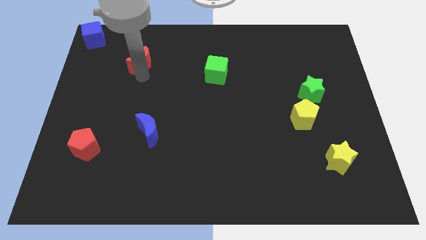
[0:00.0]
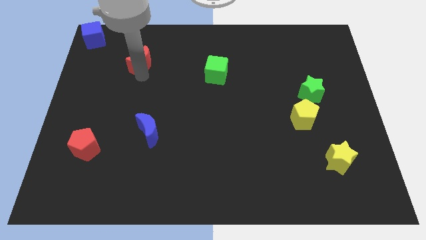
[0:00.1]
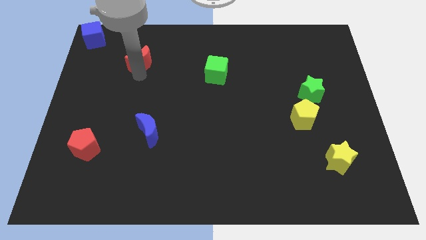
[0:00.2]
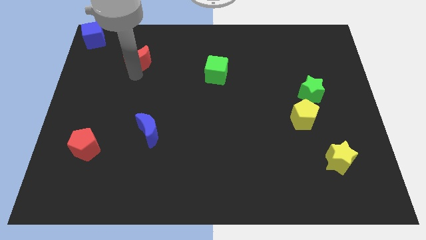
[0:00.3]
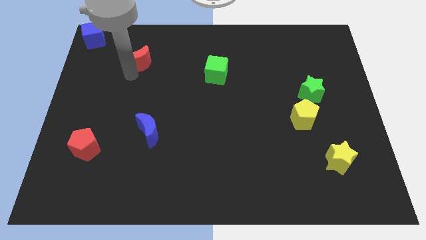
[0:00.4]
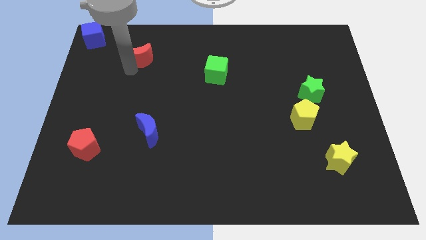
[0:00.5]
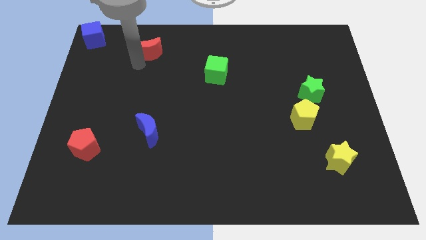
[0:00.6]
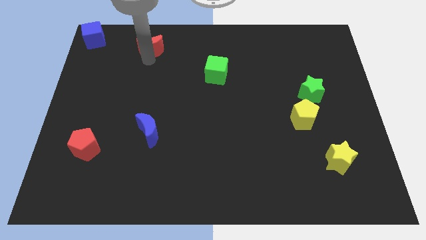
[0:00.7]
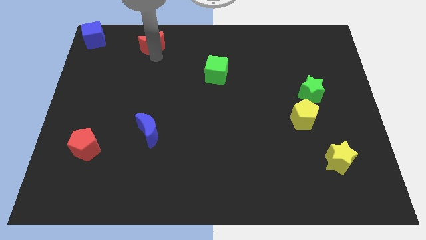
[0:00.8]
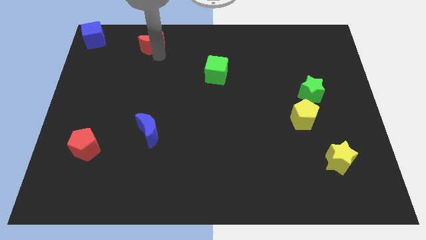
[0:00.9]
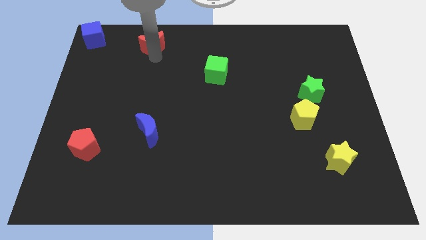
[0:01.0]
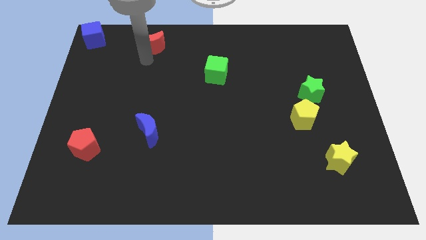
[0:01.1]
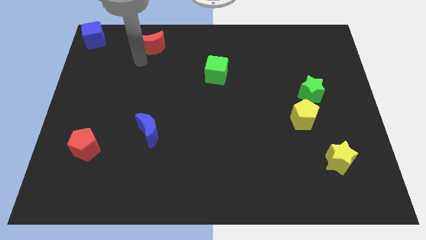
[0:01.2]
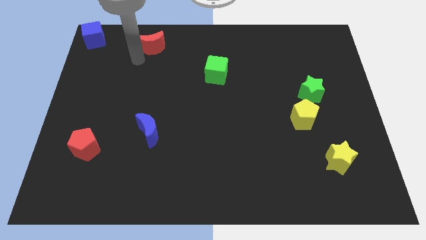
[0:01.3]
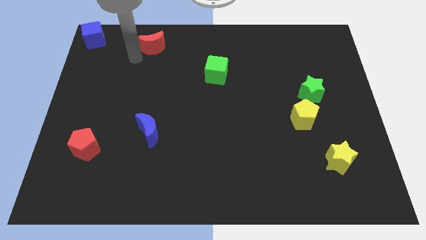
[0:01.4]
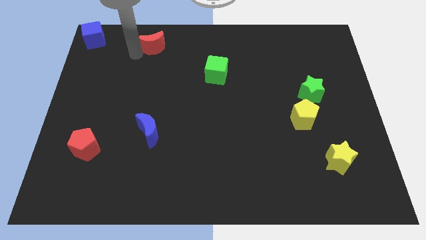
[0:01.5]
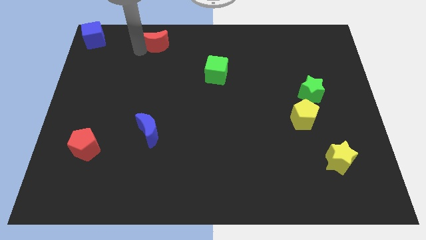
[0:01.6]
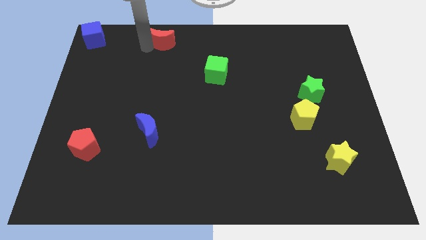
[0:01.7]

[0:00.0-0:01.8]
place the red crescent to the right side of the blue cube

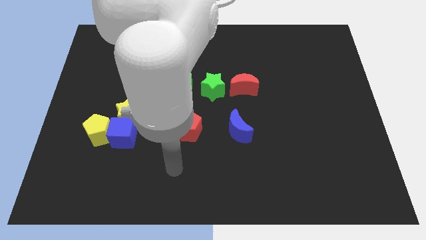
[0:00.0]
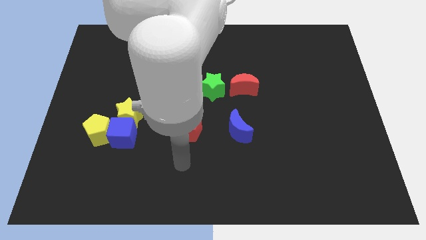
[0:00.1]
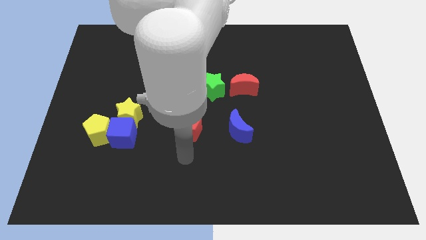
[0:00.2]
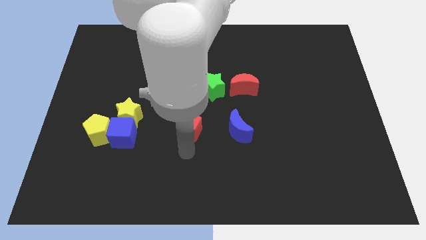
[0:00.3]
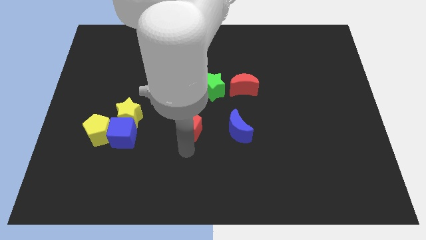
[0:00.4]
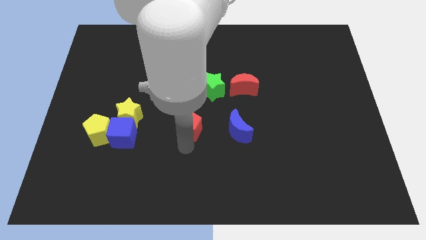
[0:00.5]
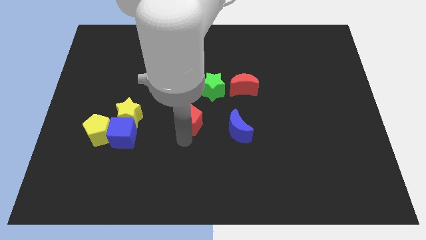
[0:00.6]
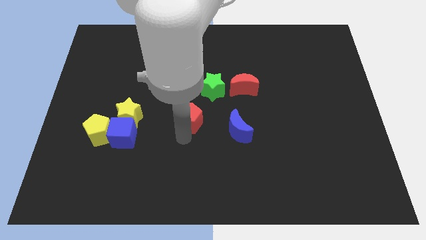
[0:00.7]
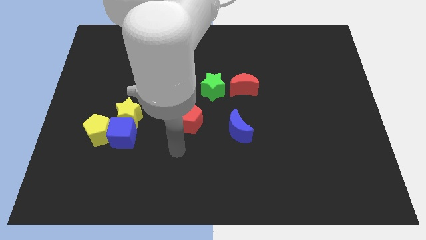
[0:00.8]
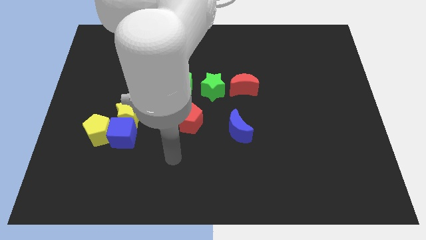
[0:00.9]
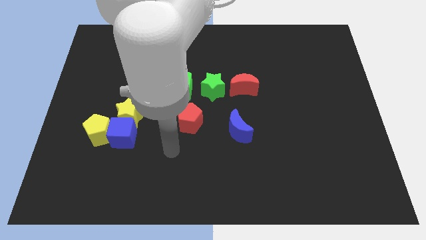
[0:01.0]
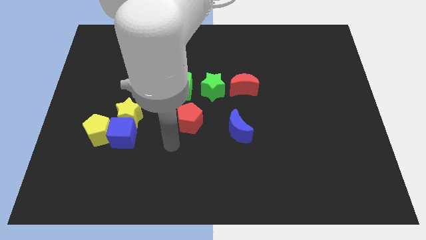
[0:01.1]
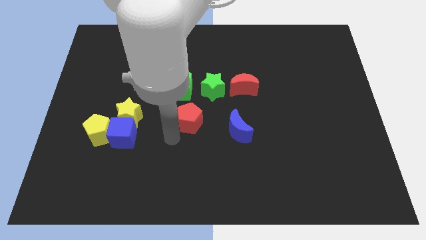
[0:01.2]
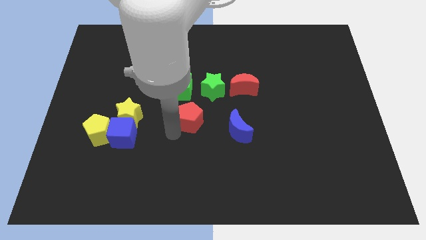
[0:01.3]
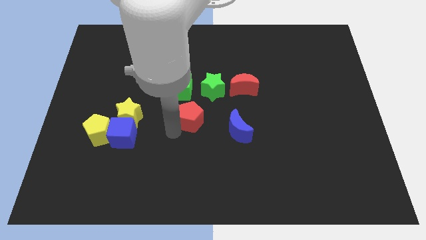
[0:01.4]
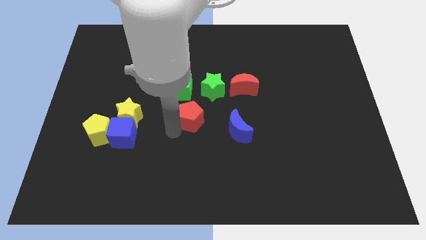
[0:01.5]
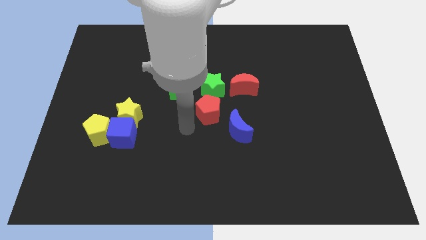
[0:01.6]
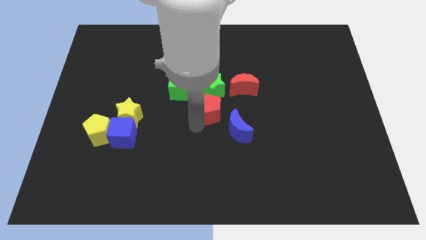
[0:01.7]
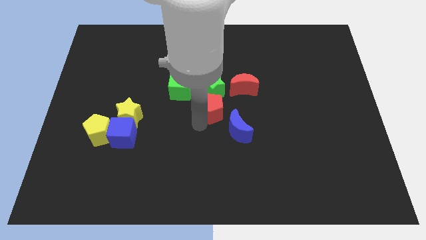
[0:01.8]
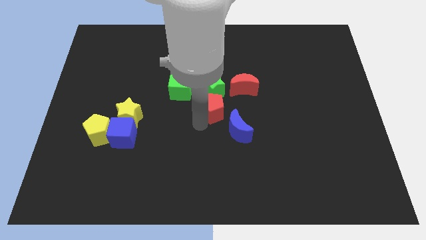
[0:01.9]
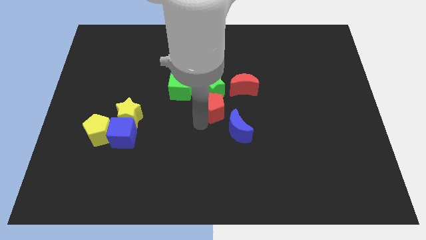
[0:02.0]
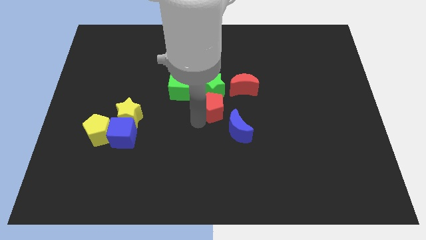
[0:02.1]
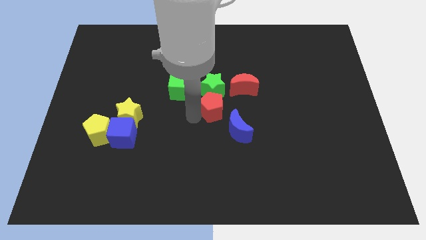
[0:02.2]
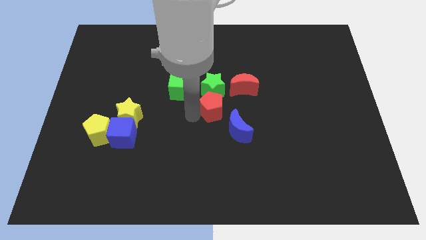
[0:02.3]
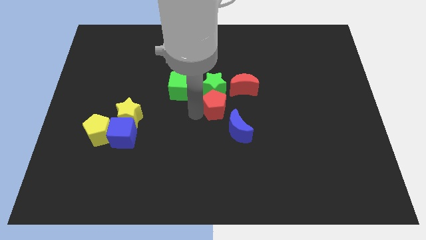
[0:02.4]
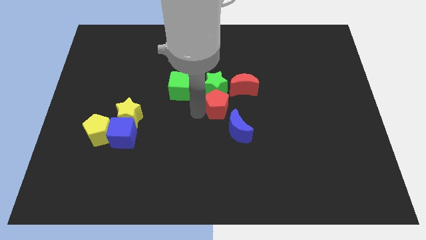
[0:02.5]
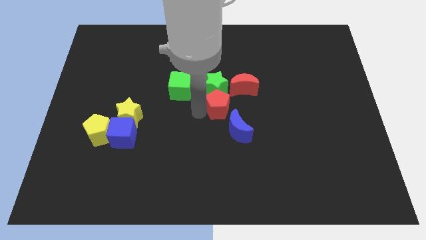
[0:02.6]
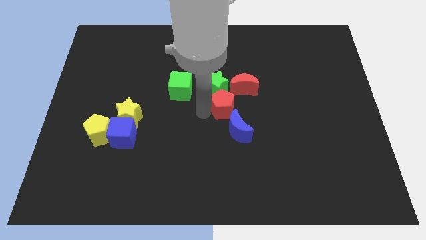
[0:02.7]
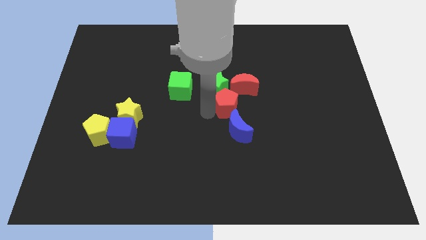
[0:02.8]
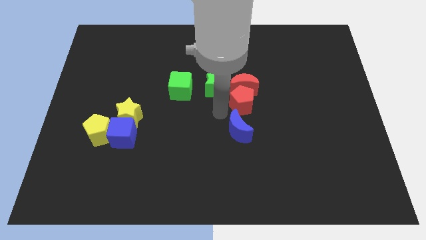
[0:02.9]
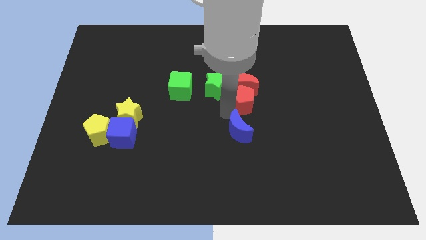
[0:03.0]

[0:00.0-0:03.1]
place the red pentagon vertically below the red crescent

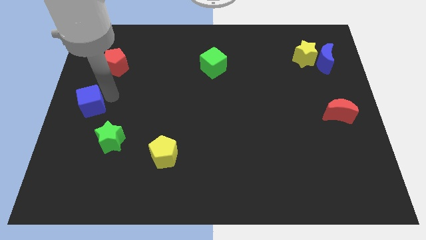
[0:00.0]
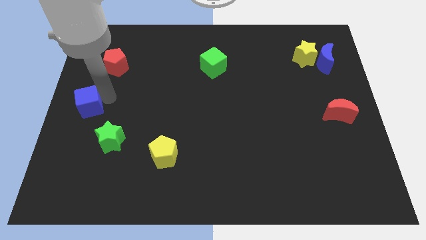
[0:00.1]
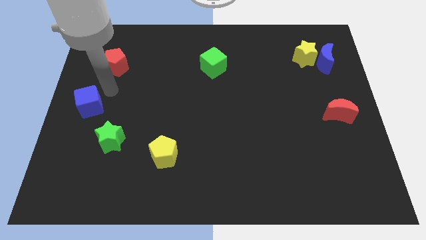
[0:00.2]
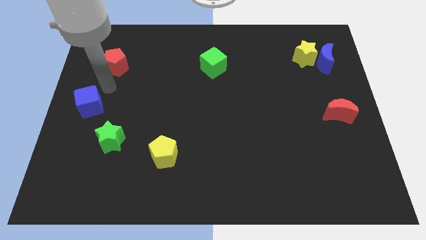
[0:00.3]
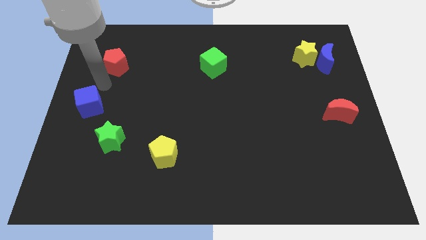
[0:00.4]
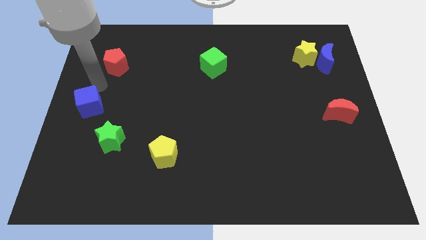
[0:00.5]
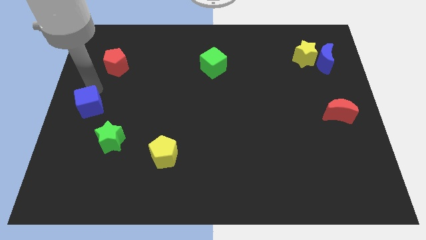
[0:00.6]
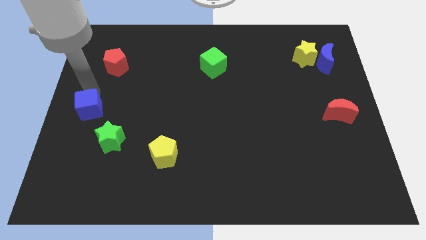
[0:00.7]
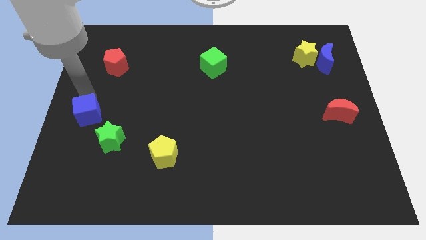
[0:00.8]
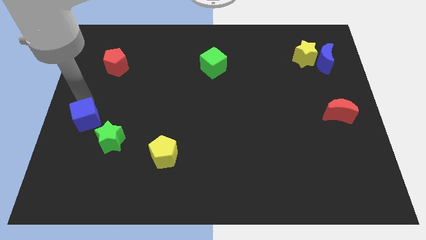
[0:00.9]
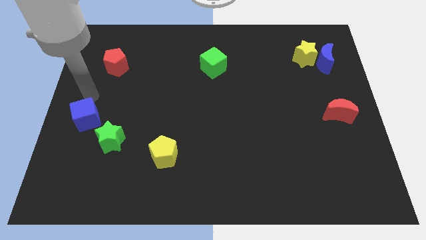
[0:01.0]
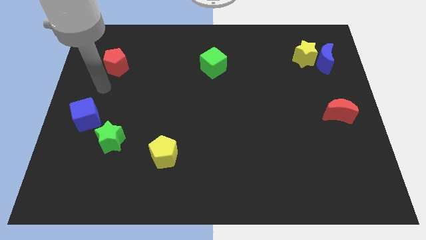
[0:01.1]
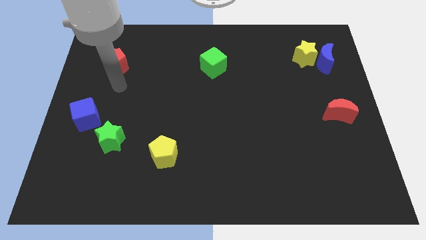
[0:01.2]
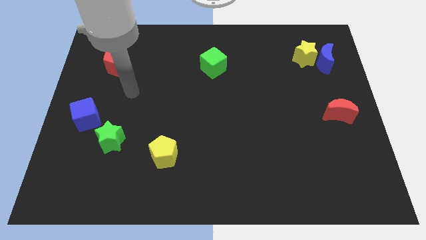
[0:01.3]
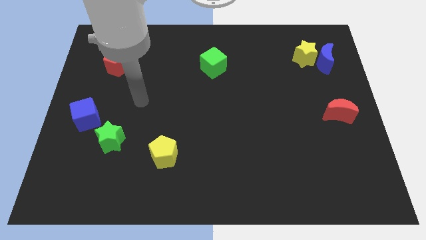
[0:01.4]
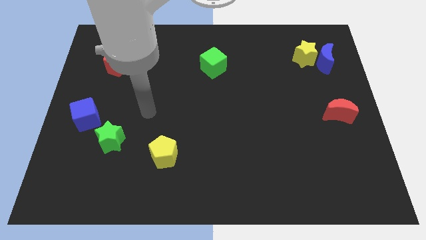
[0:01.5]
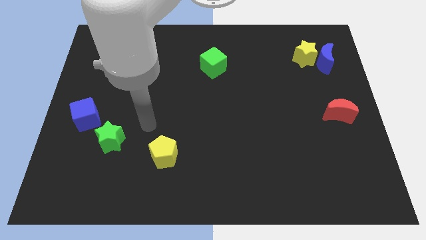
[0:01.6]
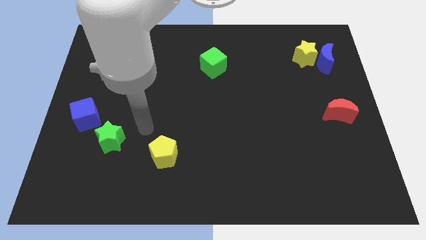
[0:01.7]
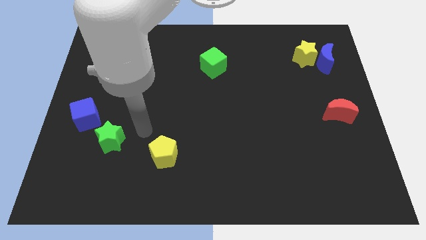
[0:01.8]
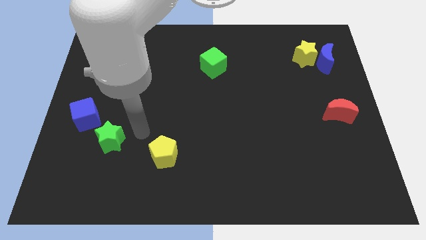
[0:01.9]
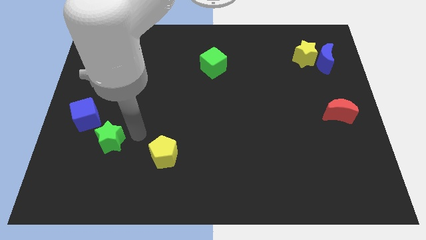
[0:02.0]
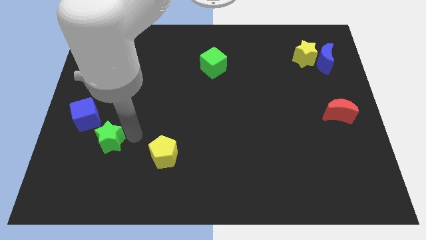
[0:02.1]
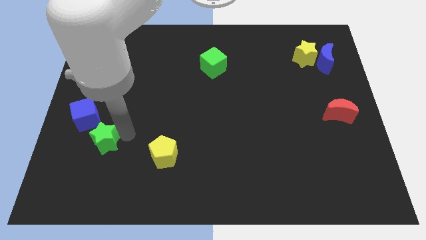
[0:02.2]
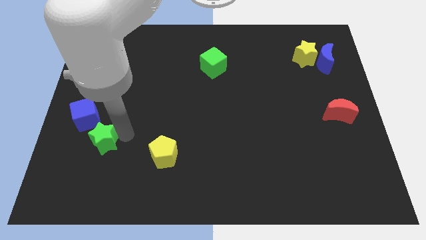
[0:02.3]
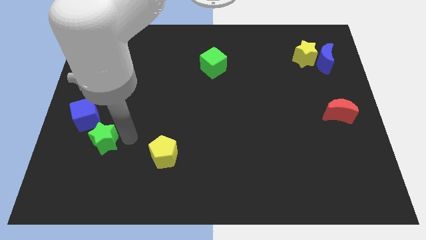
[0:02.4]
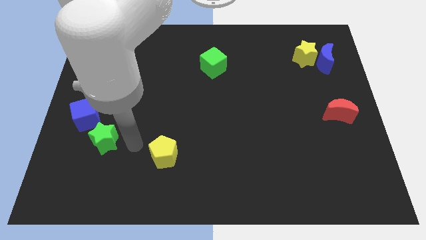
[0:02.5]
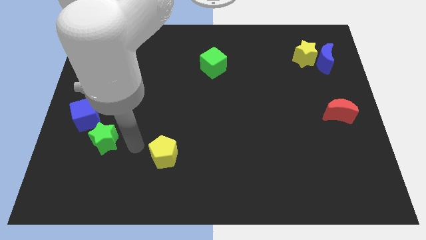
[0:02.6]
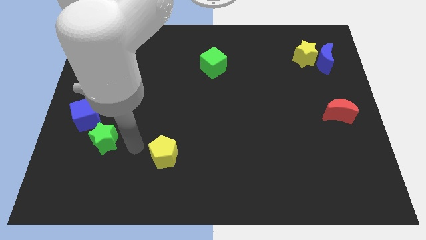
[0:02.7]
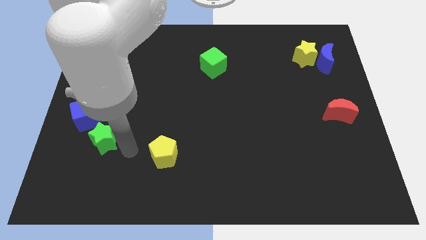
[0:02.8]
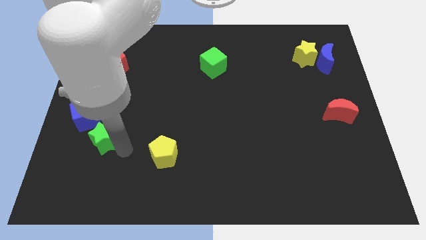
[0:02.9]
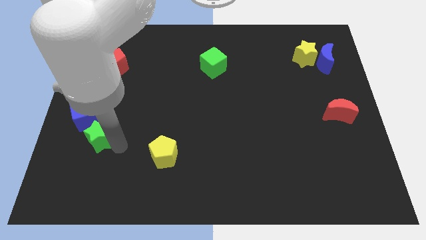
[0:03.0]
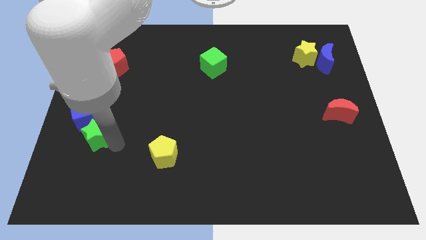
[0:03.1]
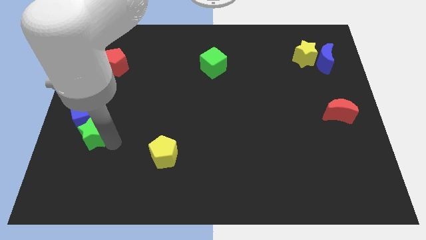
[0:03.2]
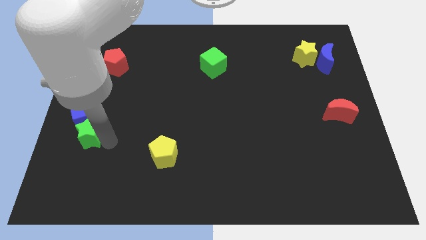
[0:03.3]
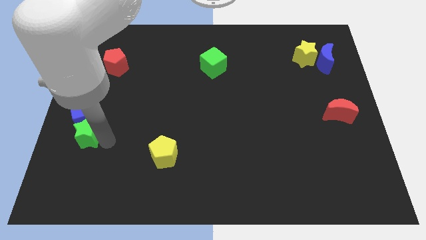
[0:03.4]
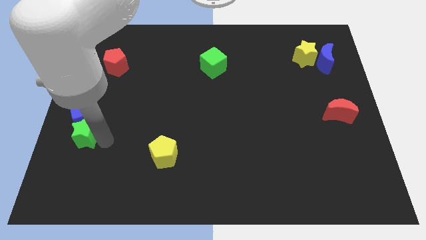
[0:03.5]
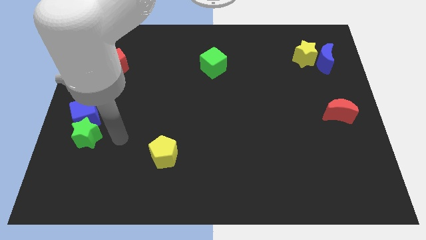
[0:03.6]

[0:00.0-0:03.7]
place the green star to the bottom of the blue cube

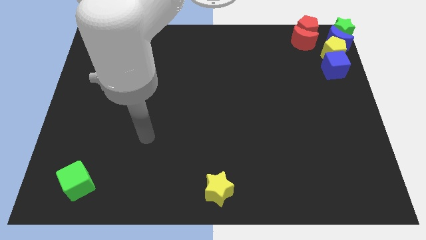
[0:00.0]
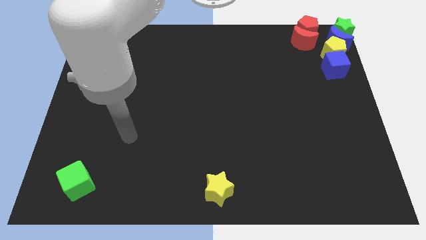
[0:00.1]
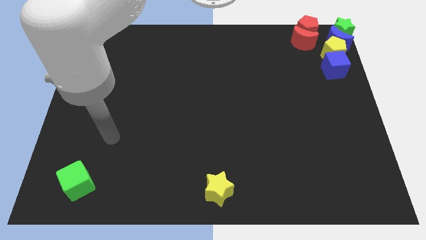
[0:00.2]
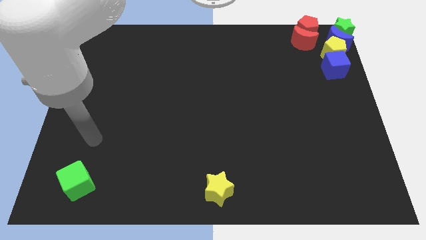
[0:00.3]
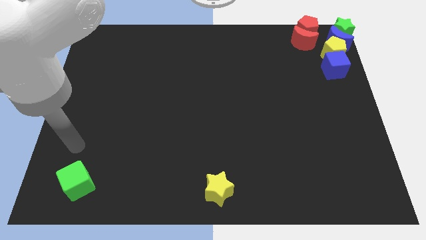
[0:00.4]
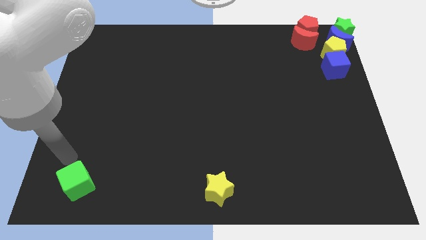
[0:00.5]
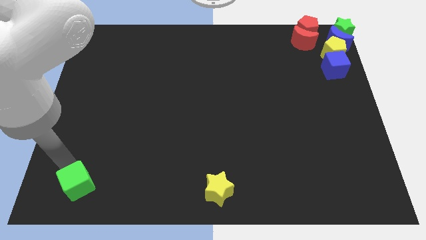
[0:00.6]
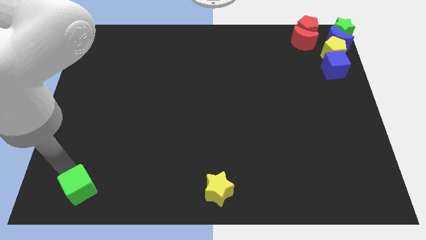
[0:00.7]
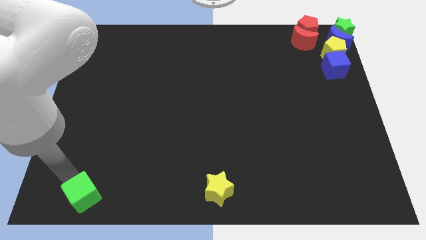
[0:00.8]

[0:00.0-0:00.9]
slightly move the green cube towards the bottom
